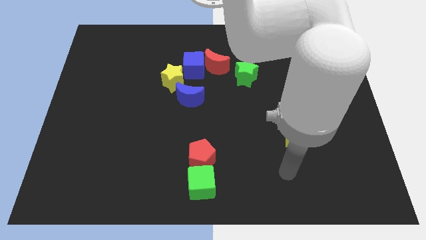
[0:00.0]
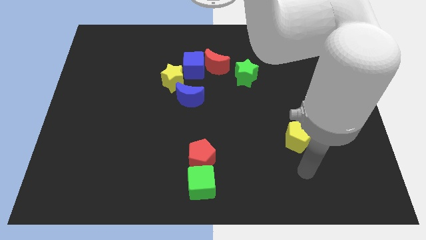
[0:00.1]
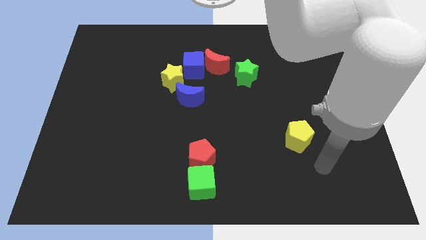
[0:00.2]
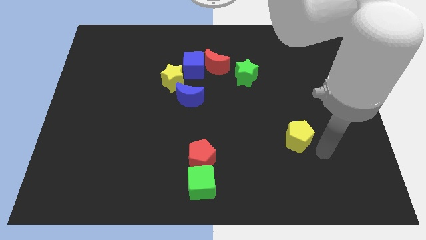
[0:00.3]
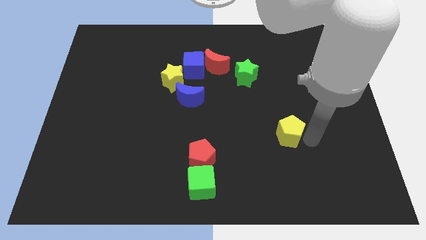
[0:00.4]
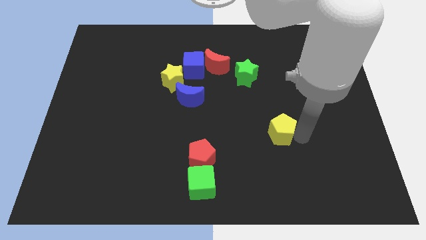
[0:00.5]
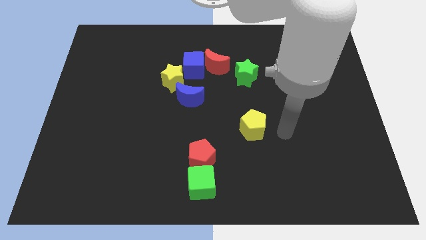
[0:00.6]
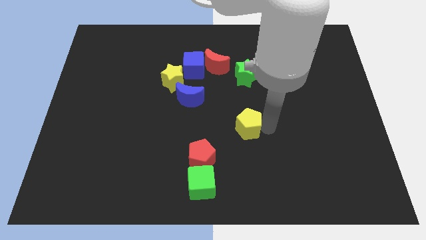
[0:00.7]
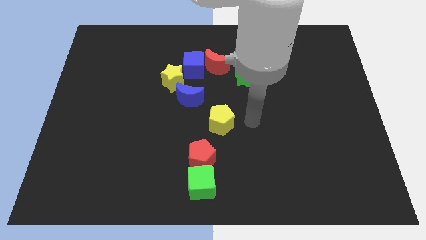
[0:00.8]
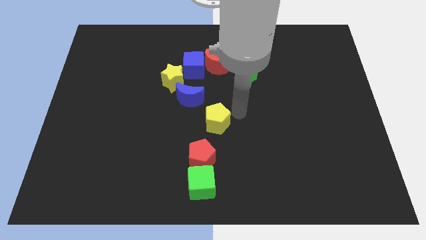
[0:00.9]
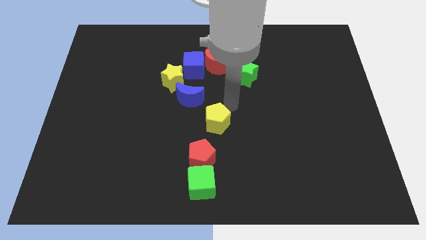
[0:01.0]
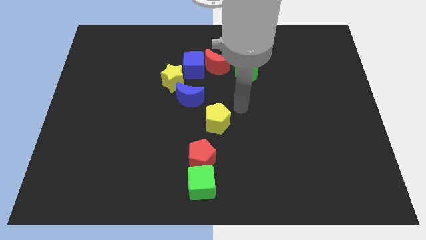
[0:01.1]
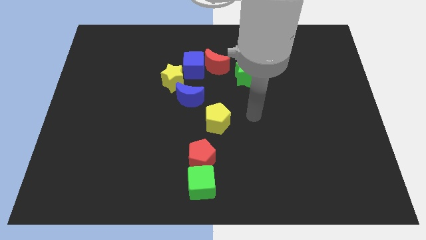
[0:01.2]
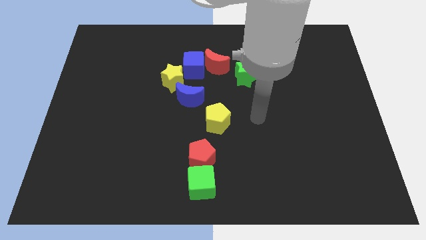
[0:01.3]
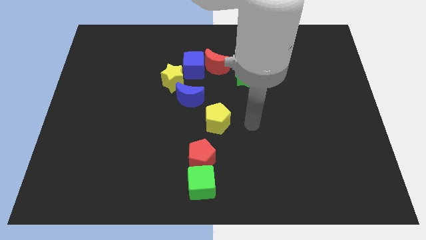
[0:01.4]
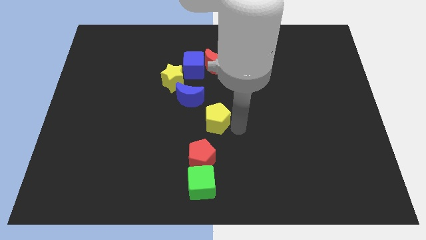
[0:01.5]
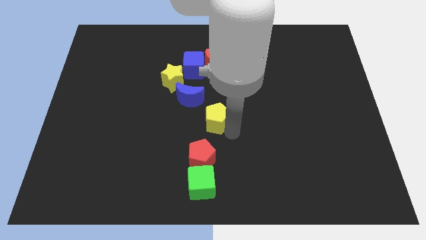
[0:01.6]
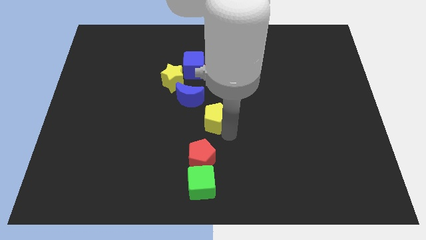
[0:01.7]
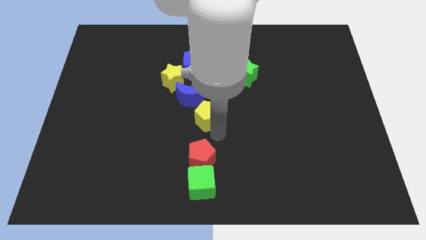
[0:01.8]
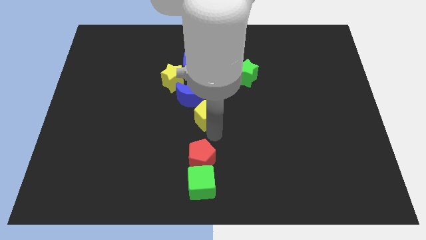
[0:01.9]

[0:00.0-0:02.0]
place the yellow pentagon towards center

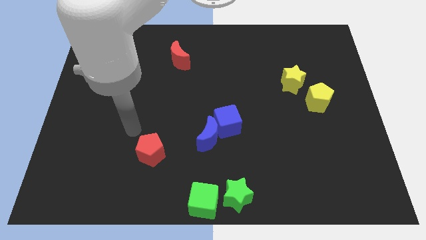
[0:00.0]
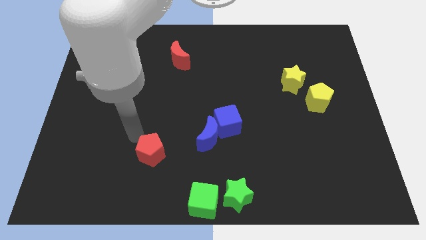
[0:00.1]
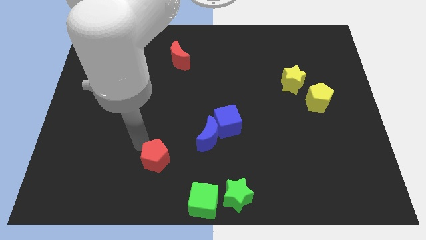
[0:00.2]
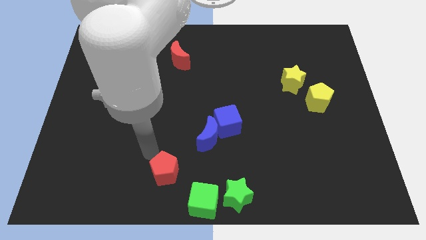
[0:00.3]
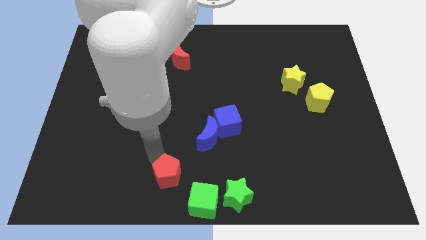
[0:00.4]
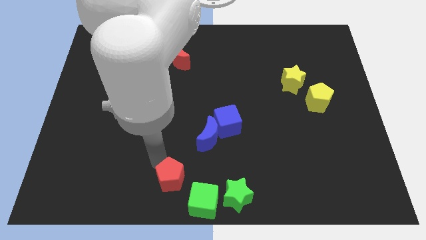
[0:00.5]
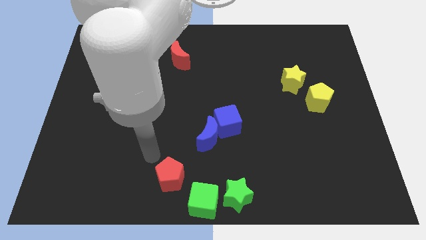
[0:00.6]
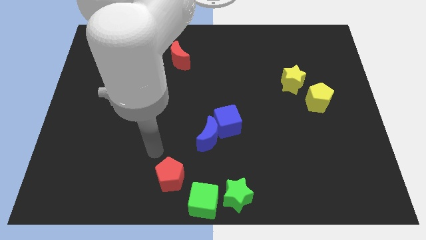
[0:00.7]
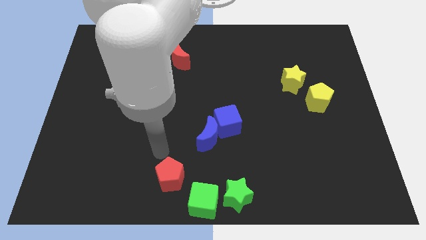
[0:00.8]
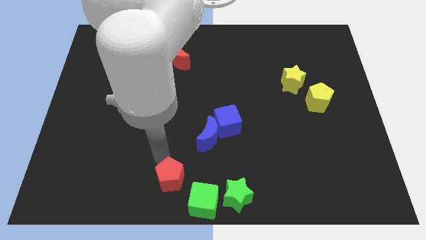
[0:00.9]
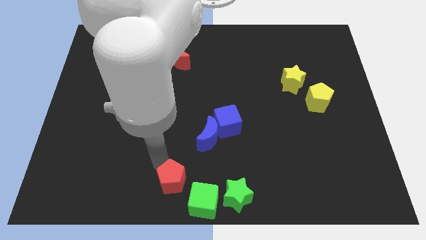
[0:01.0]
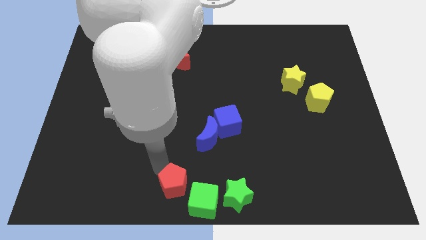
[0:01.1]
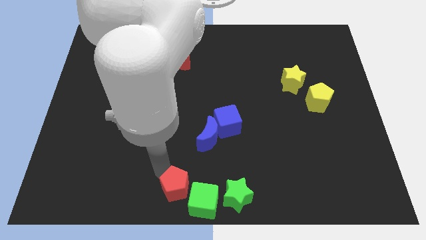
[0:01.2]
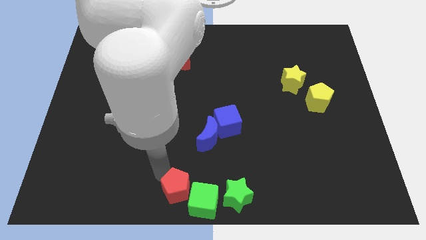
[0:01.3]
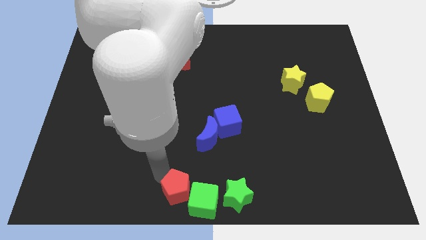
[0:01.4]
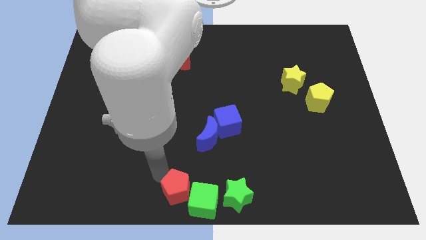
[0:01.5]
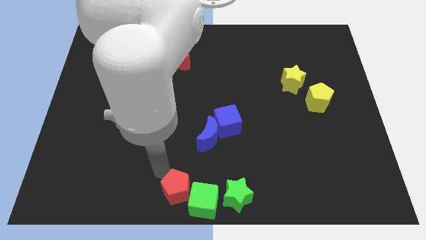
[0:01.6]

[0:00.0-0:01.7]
move the red pentagon to the left side of the green cube

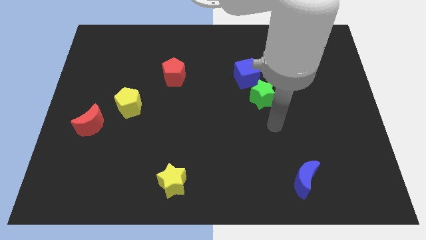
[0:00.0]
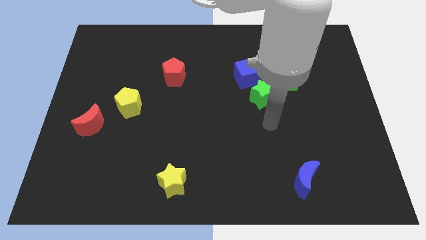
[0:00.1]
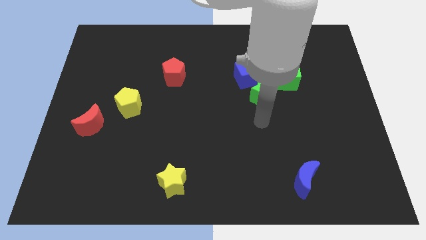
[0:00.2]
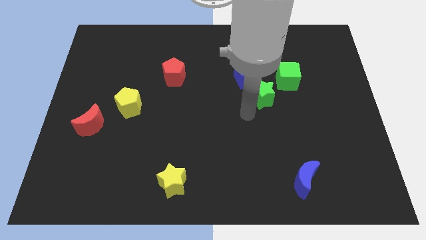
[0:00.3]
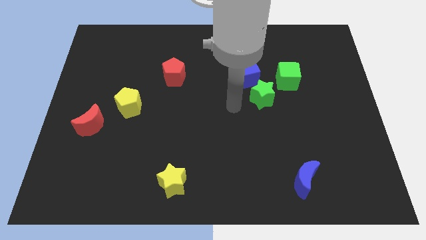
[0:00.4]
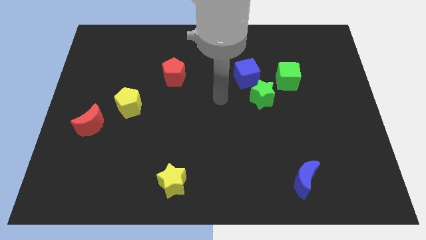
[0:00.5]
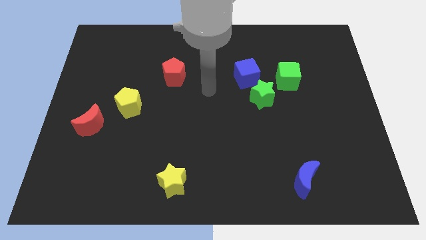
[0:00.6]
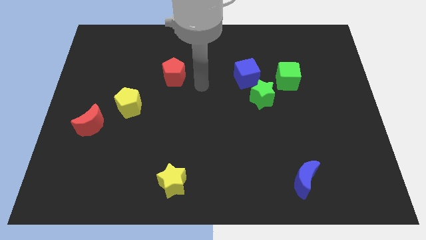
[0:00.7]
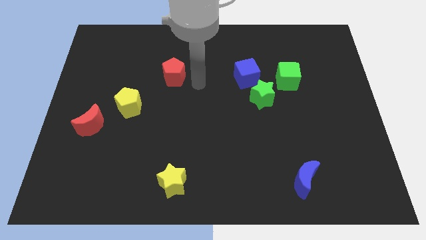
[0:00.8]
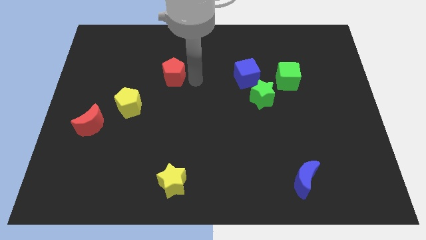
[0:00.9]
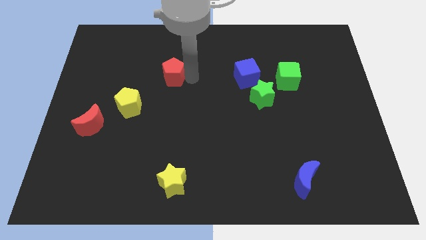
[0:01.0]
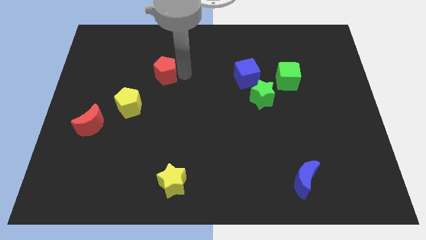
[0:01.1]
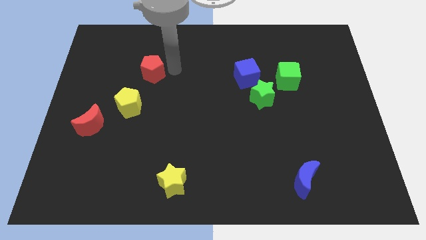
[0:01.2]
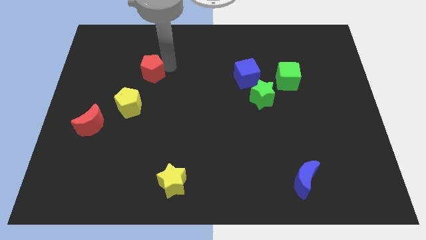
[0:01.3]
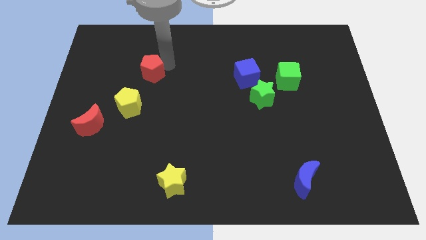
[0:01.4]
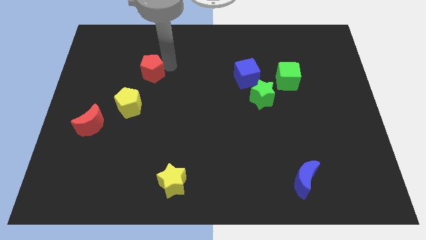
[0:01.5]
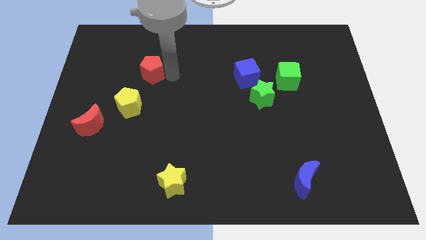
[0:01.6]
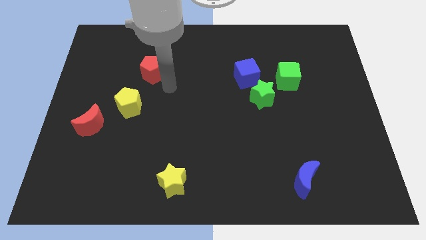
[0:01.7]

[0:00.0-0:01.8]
move the red pentagon to the top side of the yellow pentagon

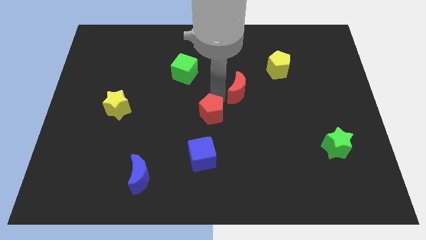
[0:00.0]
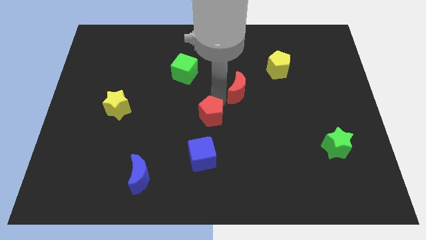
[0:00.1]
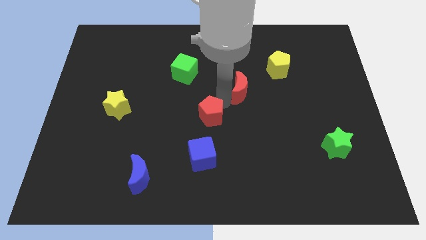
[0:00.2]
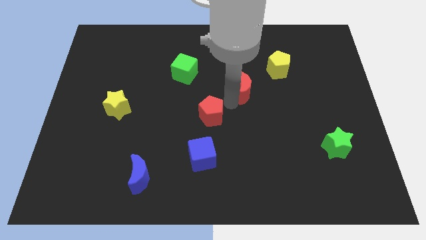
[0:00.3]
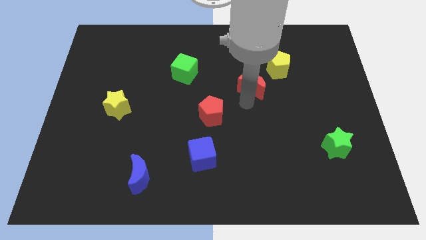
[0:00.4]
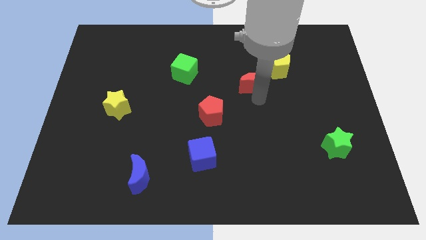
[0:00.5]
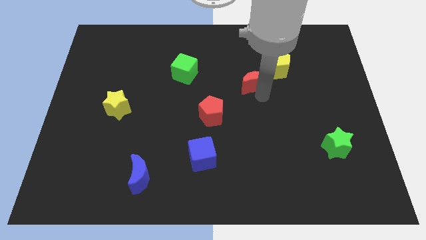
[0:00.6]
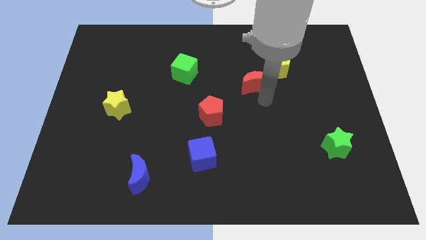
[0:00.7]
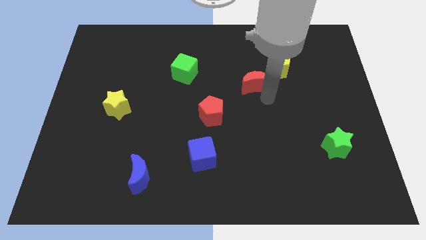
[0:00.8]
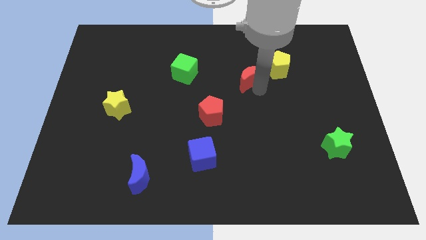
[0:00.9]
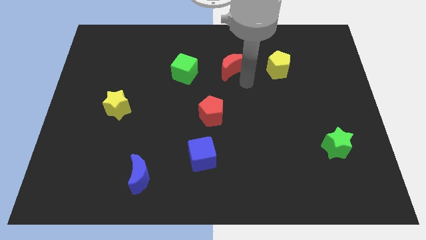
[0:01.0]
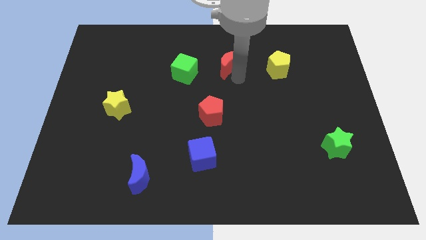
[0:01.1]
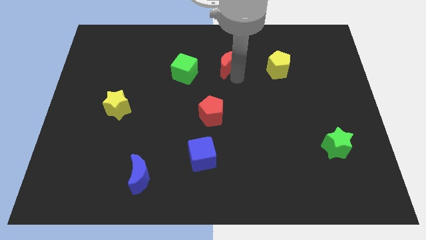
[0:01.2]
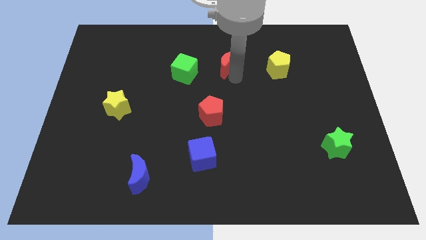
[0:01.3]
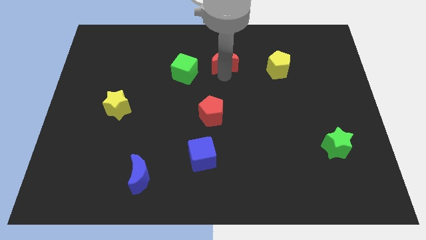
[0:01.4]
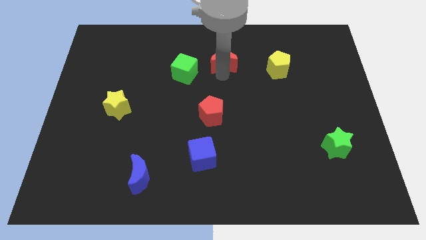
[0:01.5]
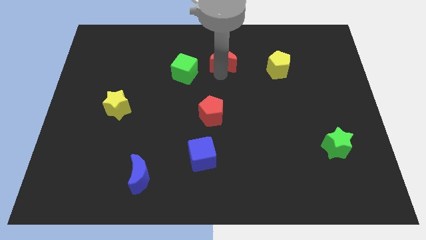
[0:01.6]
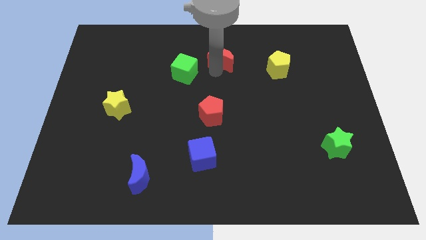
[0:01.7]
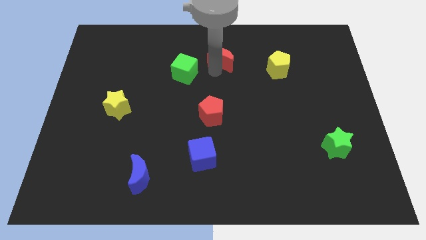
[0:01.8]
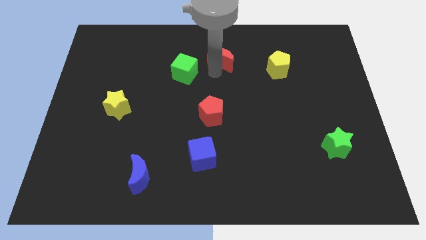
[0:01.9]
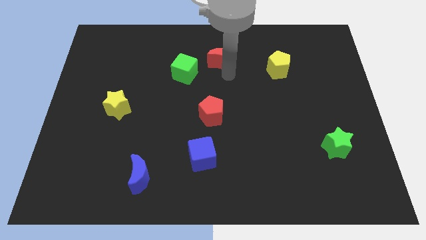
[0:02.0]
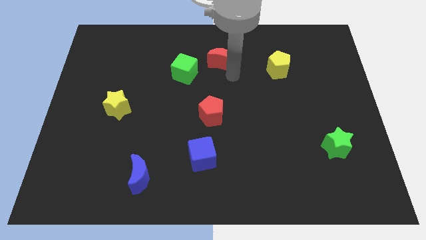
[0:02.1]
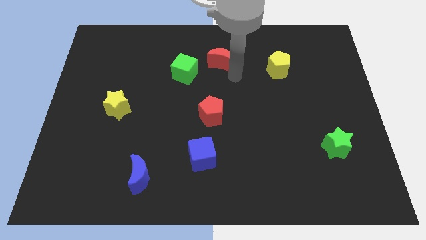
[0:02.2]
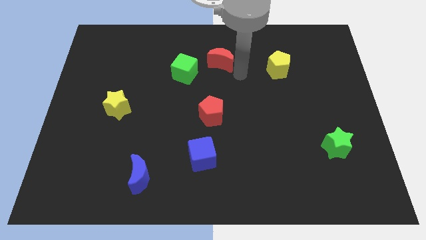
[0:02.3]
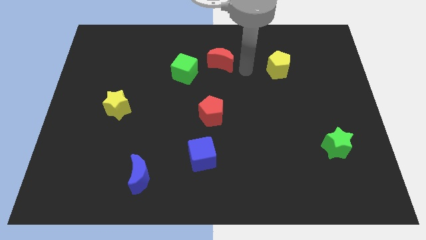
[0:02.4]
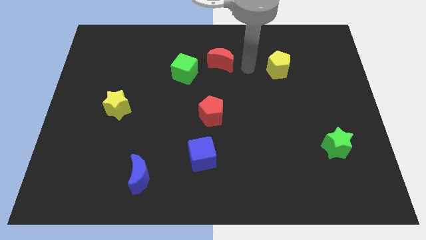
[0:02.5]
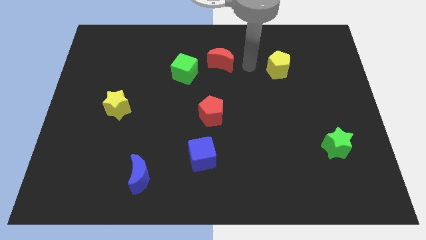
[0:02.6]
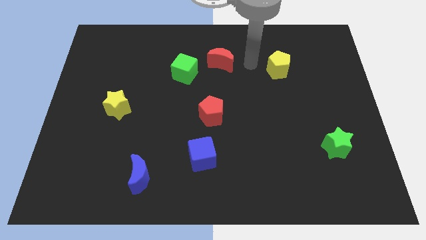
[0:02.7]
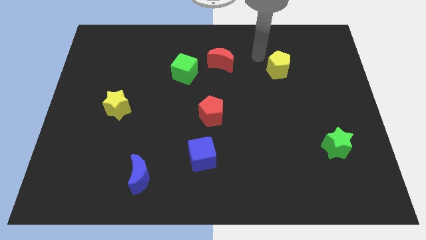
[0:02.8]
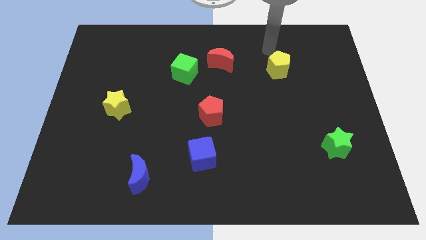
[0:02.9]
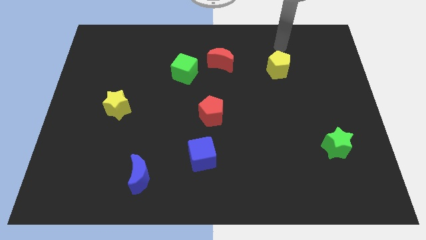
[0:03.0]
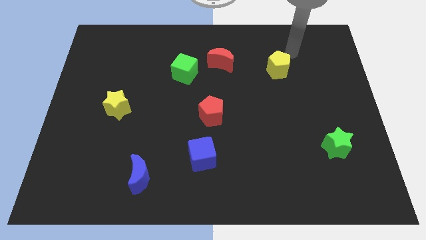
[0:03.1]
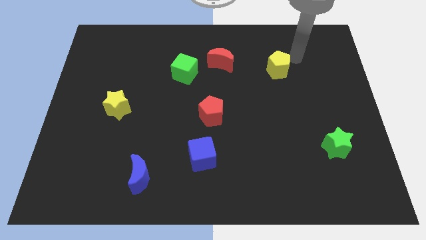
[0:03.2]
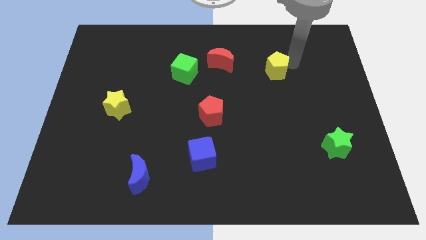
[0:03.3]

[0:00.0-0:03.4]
push the red crescent to the top center of the board

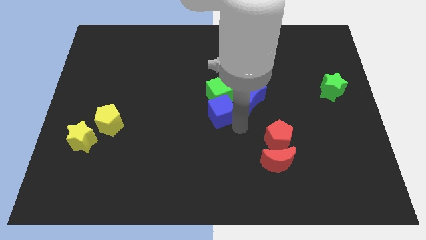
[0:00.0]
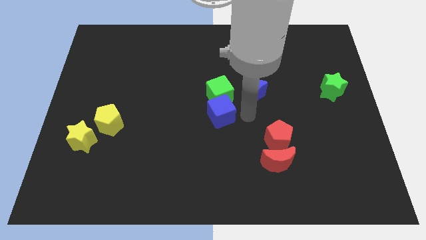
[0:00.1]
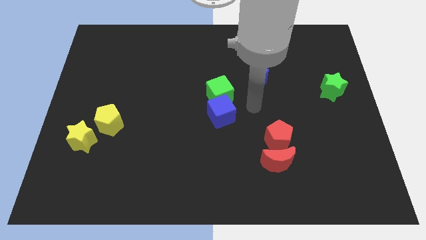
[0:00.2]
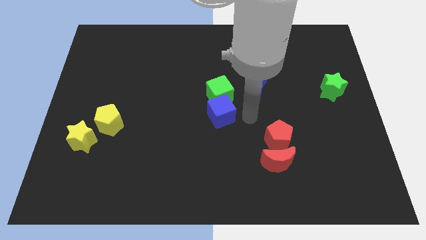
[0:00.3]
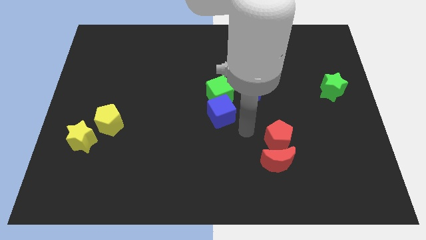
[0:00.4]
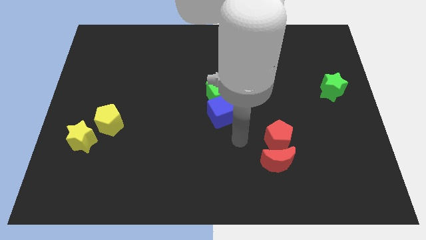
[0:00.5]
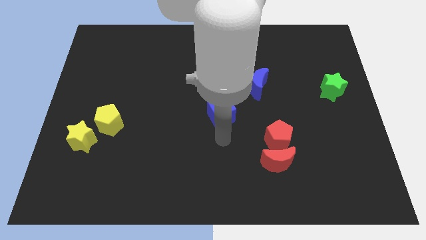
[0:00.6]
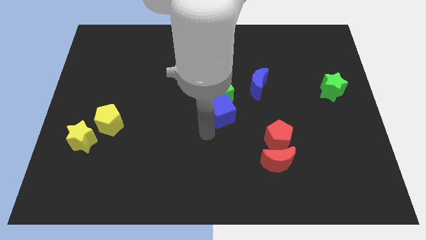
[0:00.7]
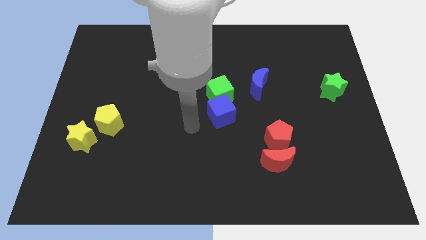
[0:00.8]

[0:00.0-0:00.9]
move the blue moon up slightly
